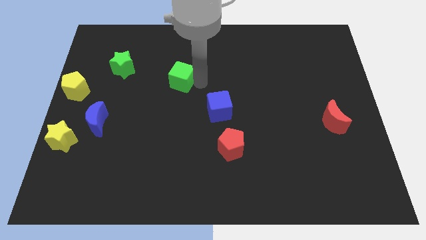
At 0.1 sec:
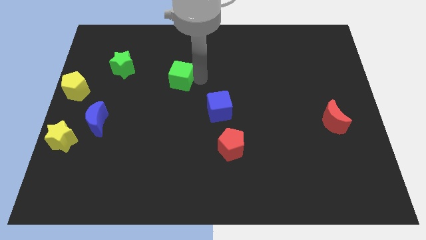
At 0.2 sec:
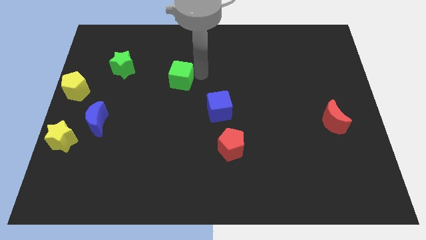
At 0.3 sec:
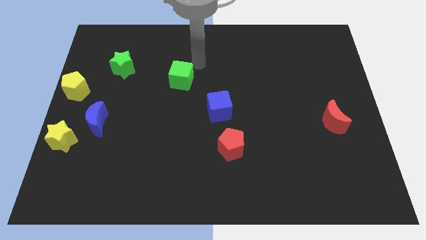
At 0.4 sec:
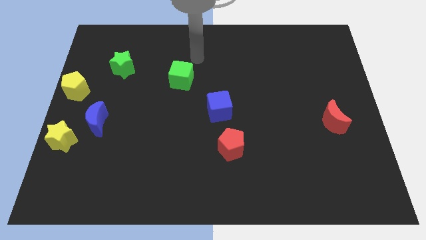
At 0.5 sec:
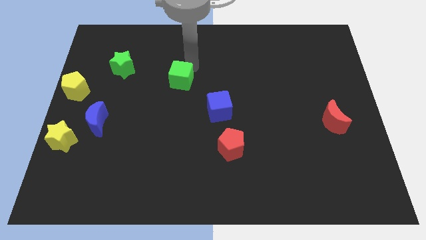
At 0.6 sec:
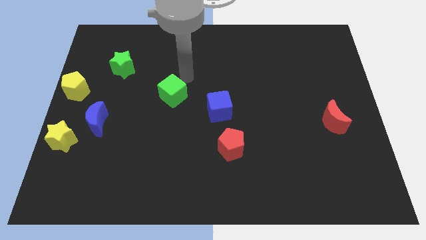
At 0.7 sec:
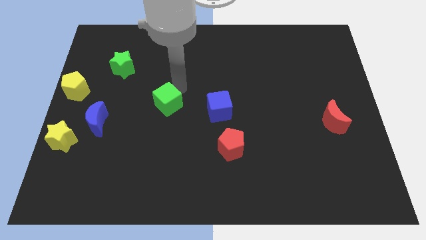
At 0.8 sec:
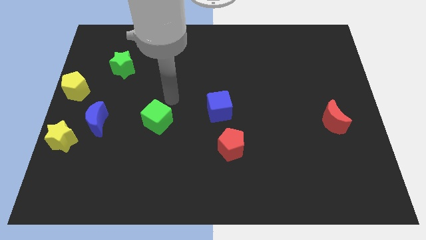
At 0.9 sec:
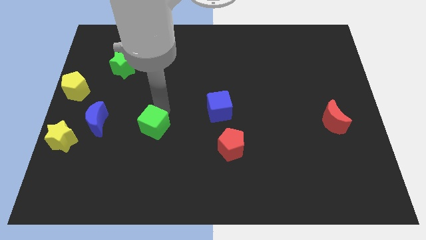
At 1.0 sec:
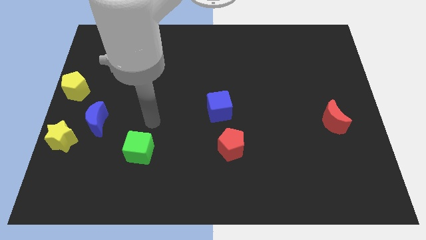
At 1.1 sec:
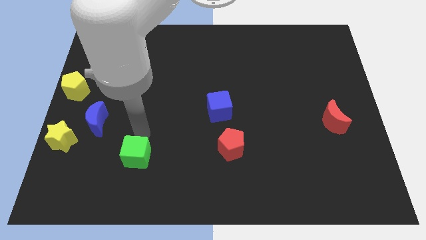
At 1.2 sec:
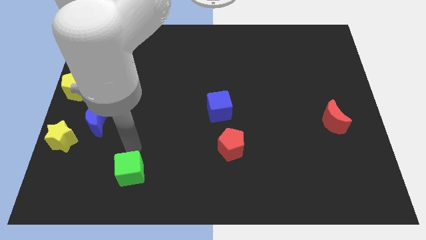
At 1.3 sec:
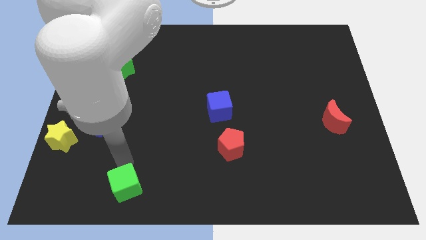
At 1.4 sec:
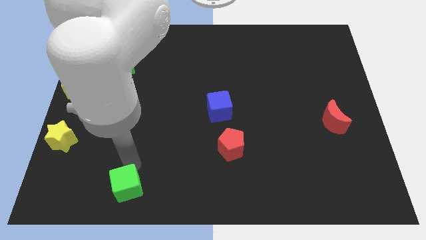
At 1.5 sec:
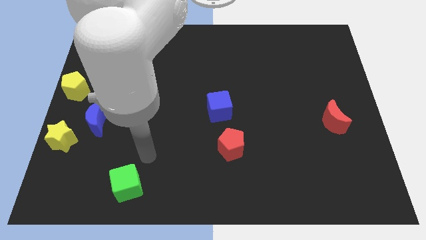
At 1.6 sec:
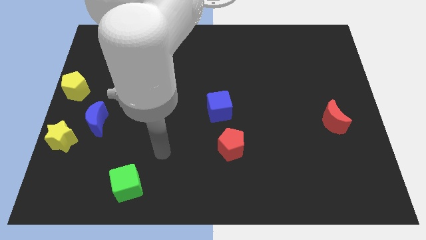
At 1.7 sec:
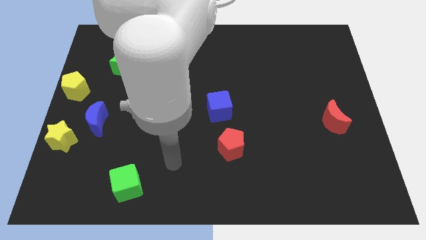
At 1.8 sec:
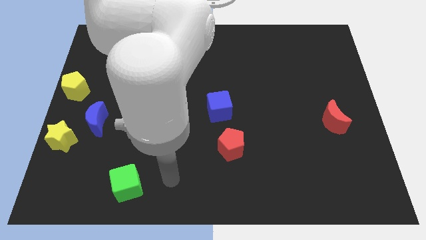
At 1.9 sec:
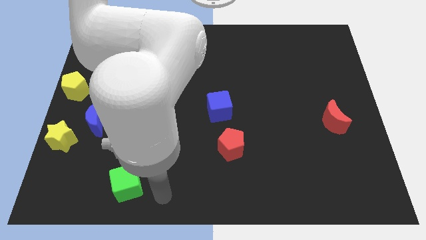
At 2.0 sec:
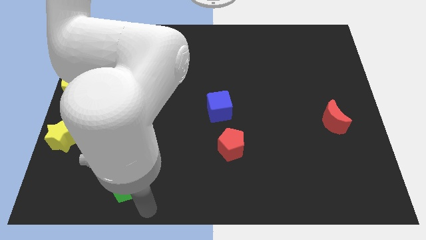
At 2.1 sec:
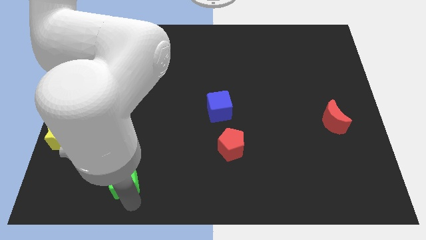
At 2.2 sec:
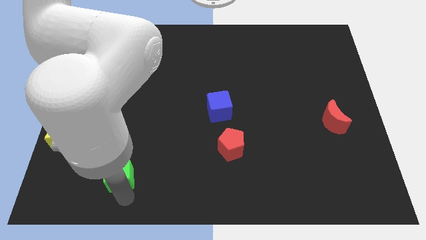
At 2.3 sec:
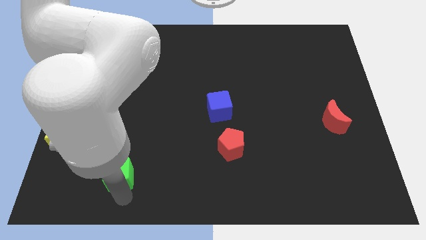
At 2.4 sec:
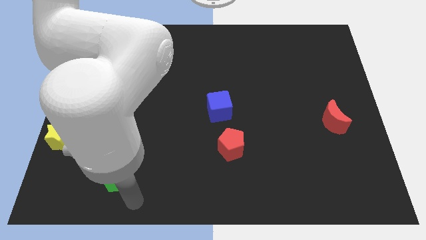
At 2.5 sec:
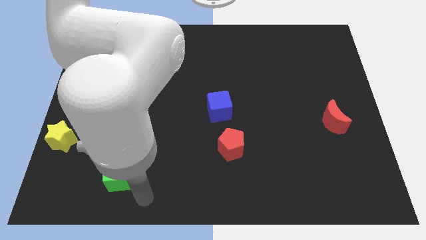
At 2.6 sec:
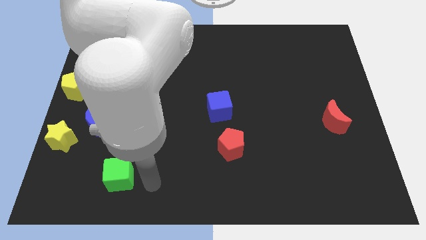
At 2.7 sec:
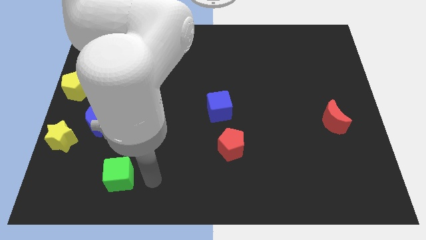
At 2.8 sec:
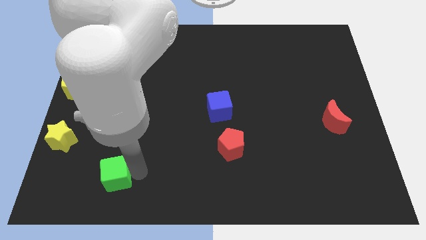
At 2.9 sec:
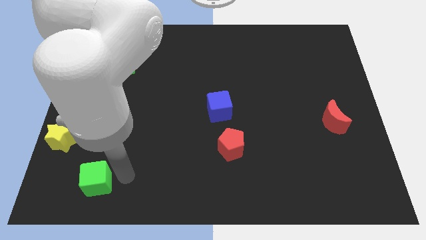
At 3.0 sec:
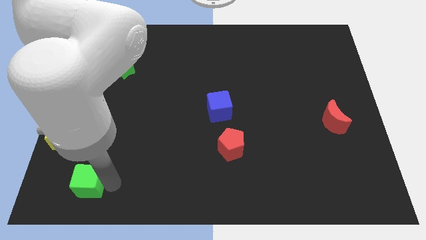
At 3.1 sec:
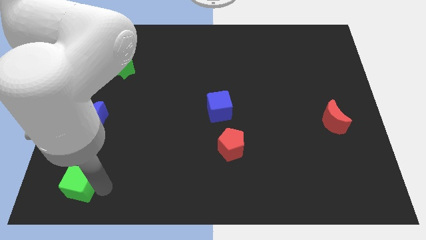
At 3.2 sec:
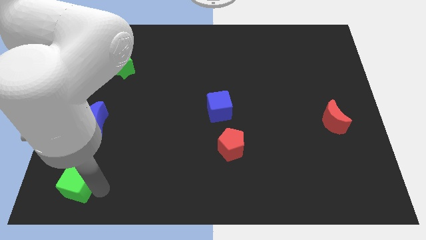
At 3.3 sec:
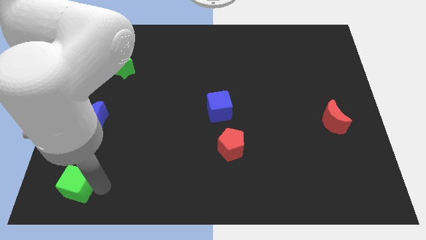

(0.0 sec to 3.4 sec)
push the green cube to the bottom left of the board

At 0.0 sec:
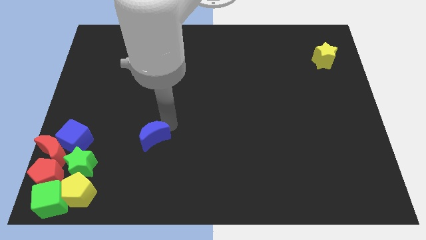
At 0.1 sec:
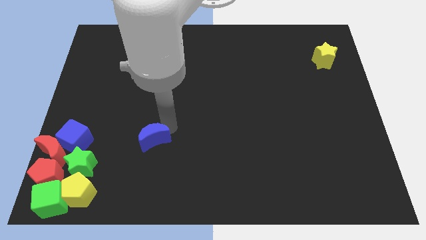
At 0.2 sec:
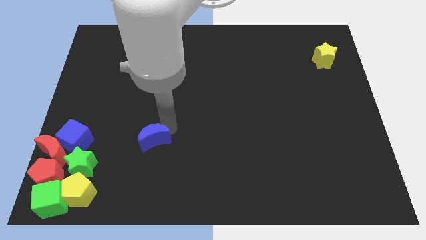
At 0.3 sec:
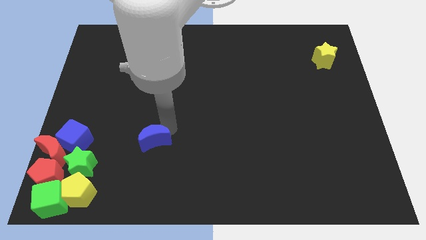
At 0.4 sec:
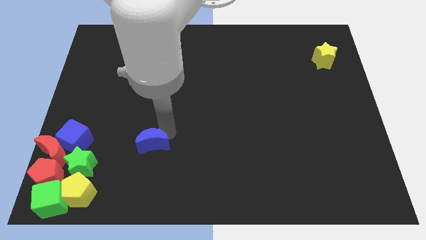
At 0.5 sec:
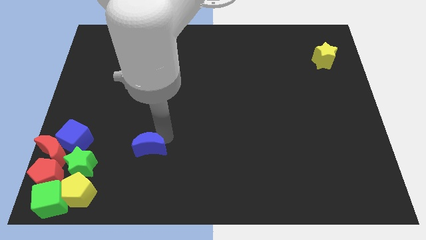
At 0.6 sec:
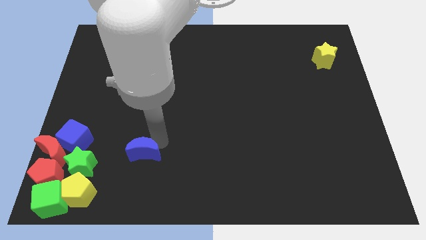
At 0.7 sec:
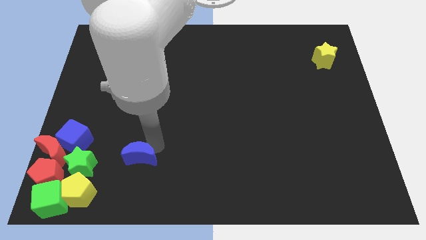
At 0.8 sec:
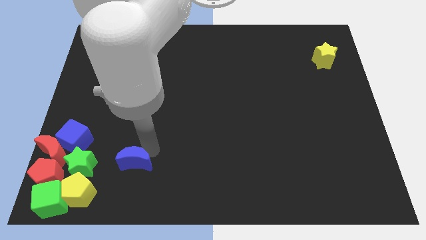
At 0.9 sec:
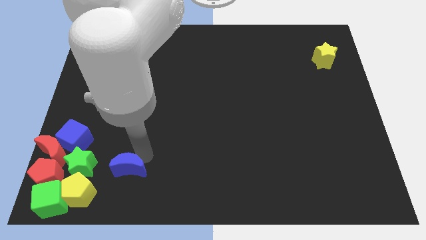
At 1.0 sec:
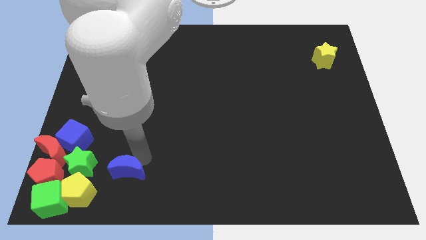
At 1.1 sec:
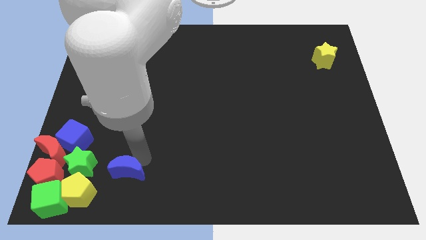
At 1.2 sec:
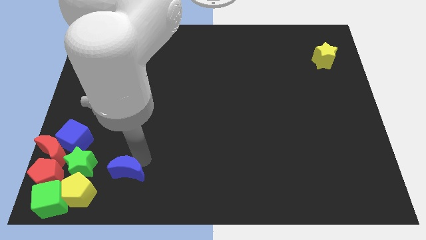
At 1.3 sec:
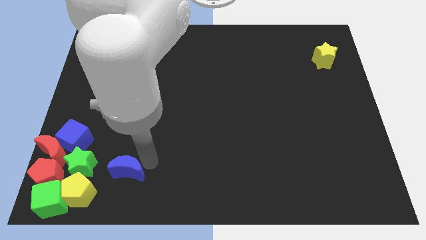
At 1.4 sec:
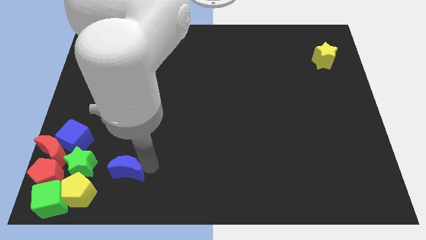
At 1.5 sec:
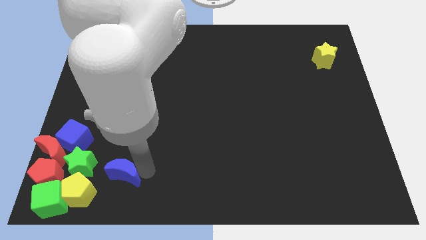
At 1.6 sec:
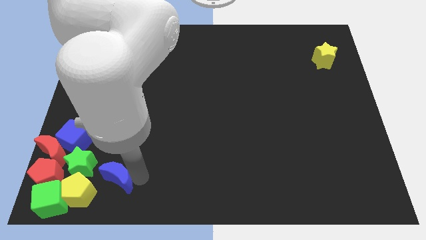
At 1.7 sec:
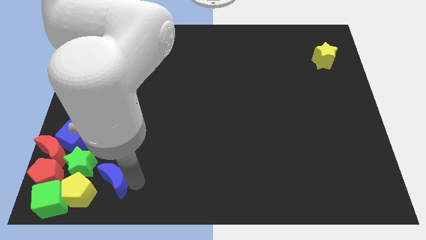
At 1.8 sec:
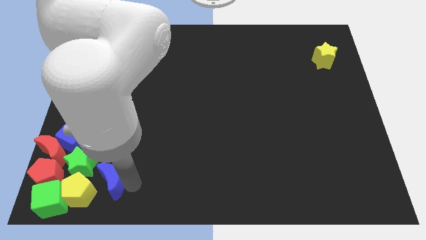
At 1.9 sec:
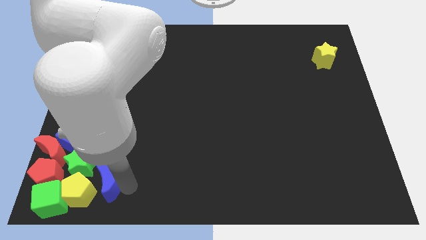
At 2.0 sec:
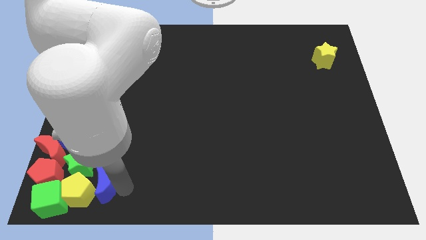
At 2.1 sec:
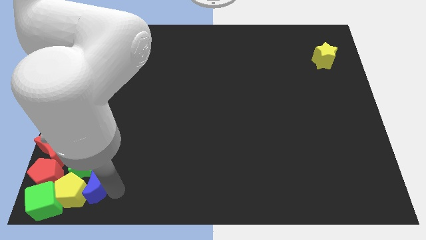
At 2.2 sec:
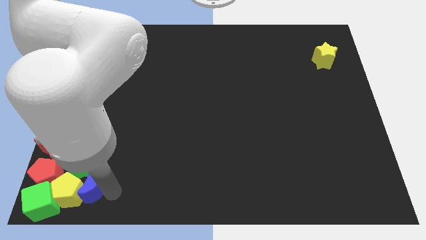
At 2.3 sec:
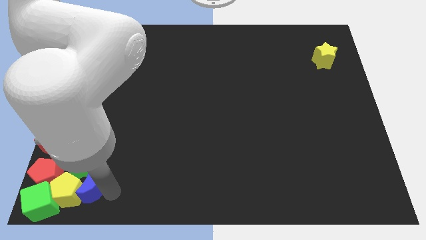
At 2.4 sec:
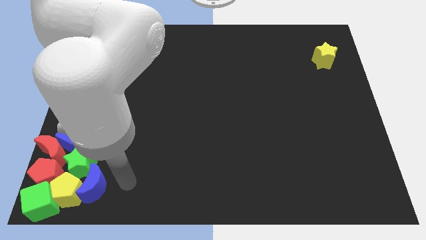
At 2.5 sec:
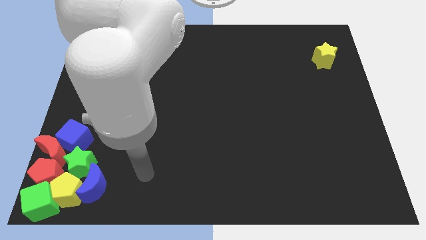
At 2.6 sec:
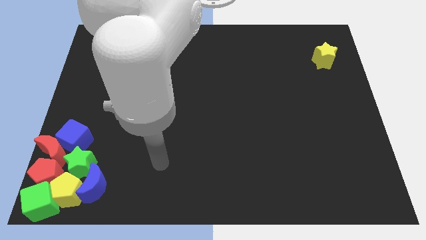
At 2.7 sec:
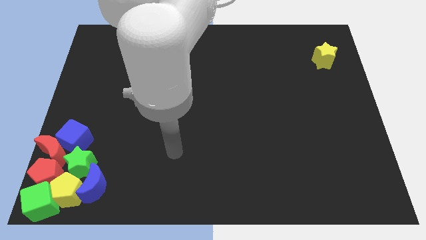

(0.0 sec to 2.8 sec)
move the blue crescent into the group of blocks

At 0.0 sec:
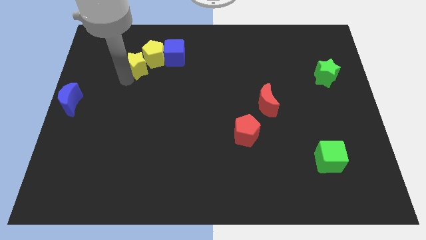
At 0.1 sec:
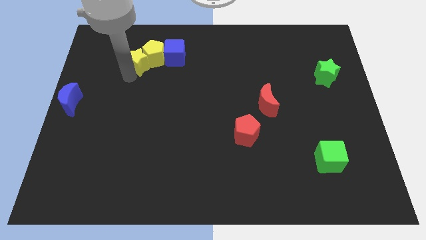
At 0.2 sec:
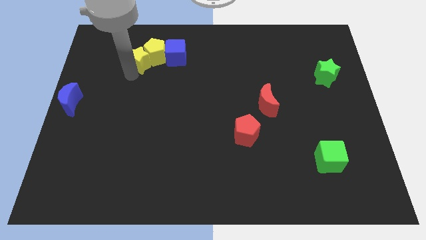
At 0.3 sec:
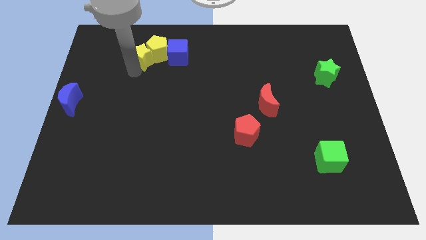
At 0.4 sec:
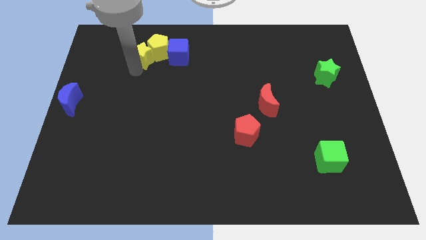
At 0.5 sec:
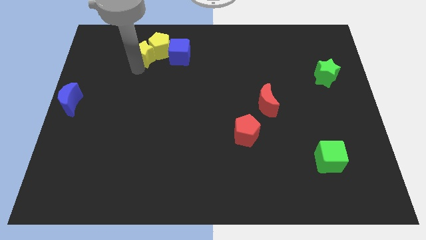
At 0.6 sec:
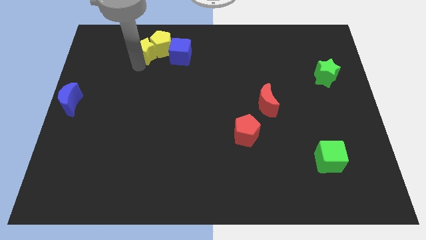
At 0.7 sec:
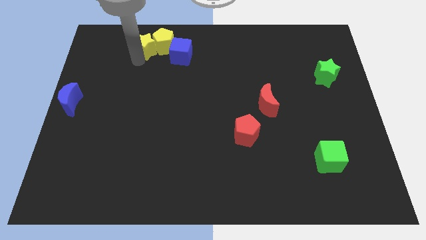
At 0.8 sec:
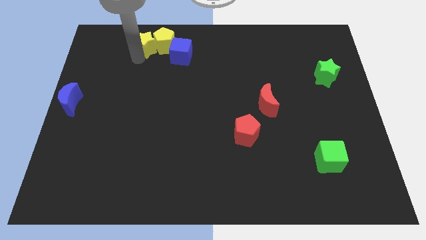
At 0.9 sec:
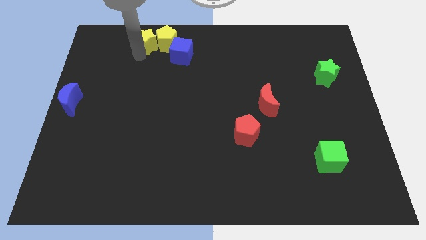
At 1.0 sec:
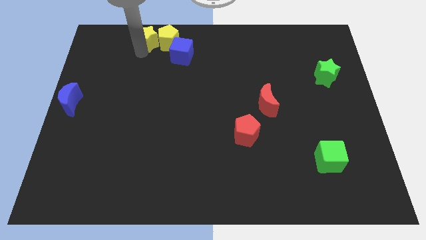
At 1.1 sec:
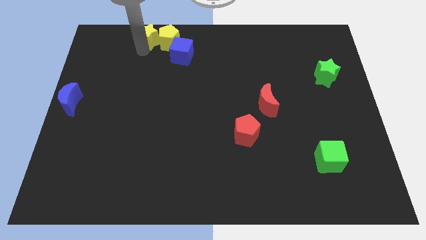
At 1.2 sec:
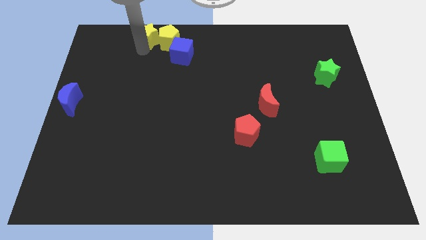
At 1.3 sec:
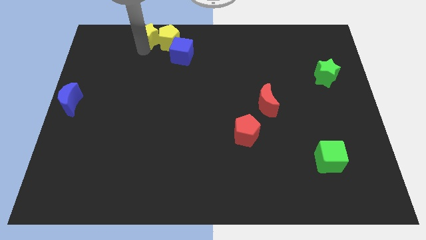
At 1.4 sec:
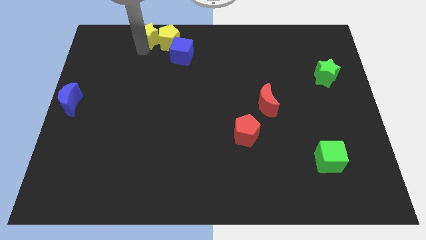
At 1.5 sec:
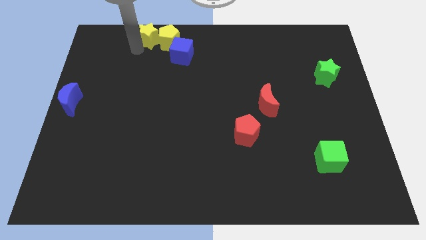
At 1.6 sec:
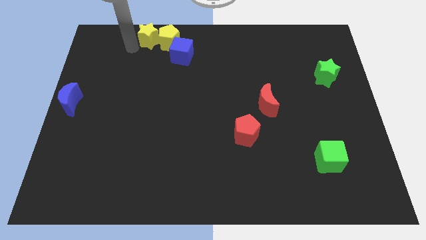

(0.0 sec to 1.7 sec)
push the yellow star into yellow pentagon

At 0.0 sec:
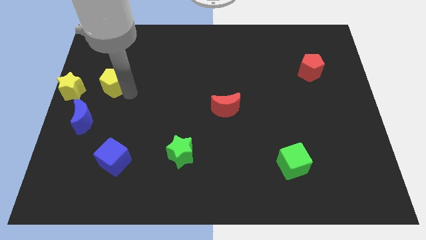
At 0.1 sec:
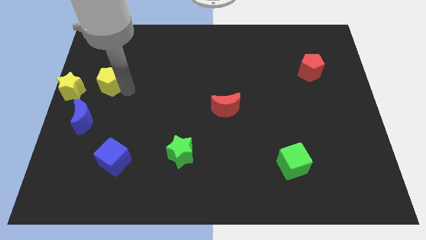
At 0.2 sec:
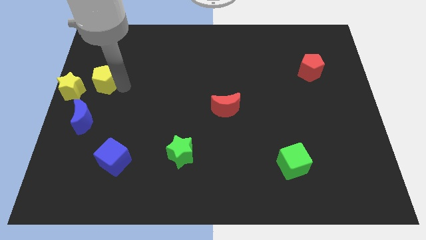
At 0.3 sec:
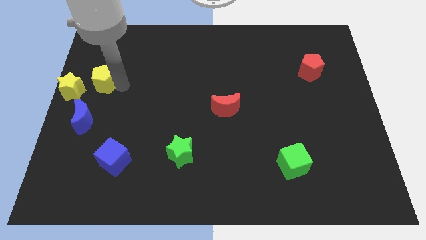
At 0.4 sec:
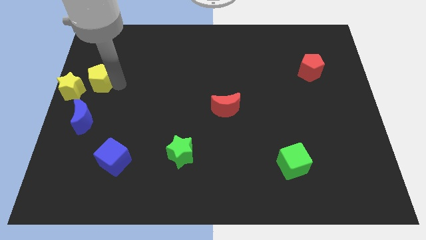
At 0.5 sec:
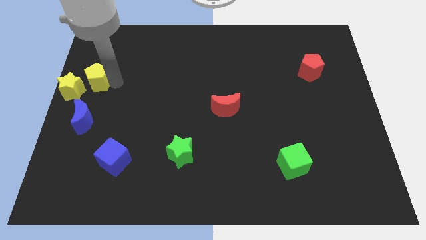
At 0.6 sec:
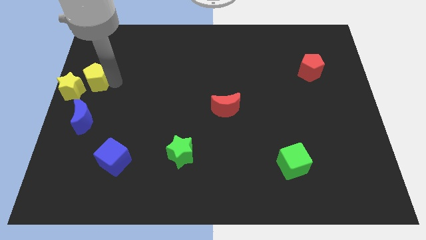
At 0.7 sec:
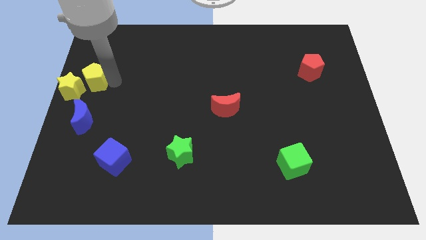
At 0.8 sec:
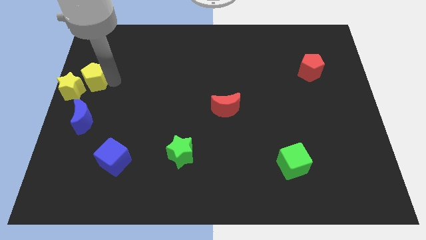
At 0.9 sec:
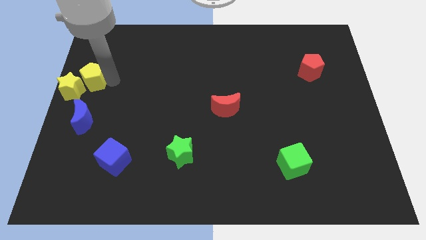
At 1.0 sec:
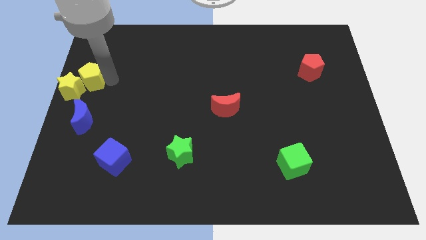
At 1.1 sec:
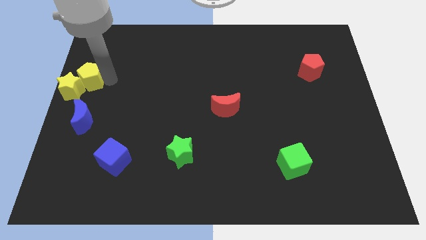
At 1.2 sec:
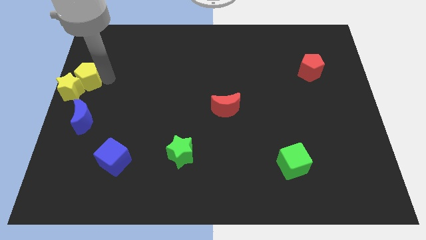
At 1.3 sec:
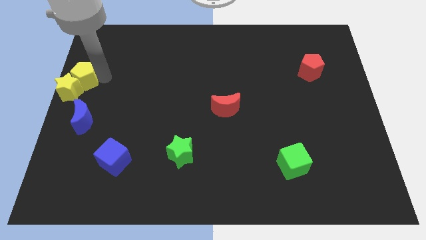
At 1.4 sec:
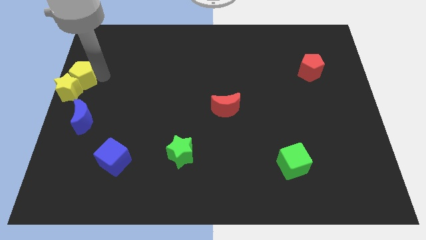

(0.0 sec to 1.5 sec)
push the yellow pentagon into the yellow star
